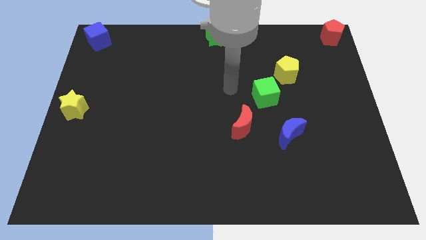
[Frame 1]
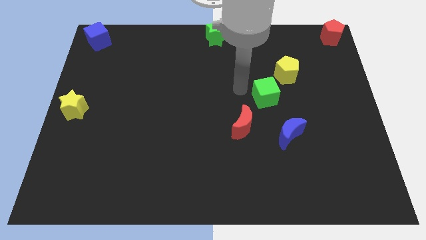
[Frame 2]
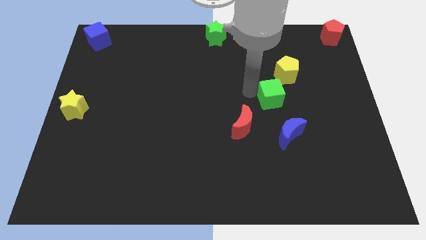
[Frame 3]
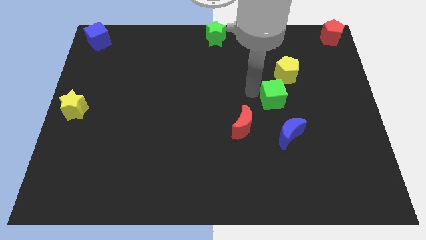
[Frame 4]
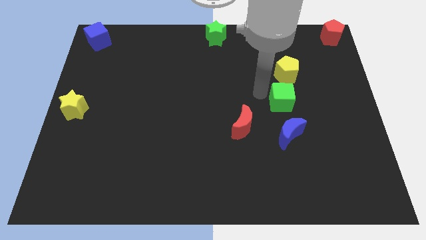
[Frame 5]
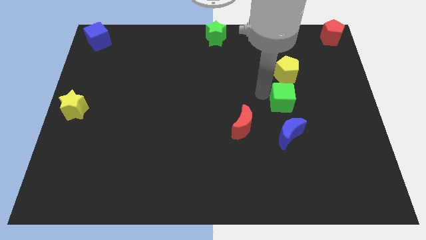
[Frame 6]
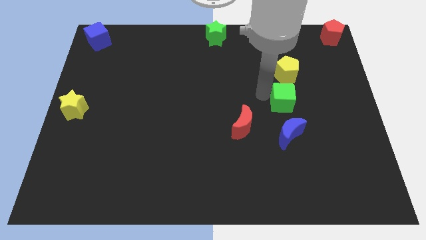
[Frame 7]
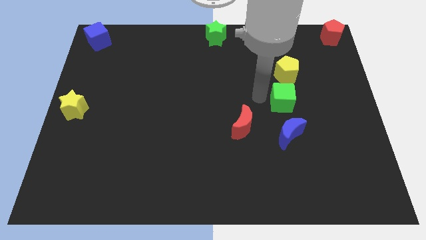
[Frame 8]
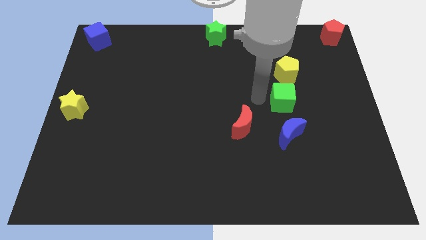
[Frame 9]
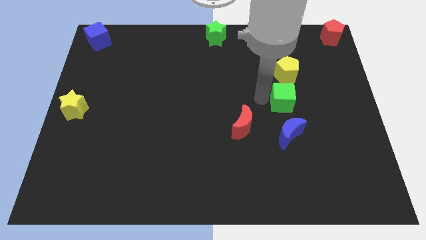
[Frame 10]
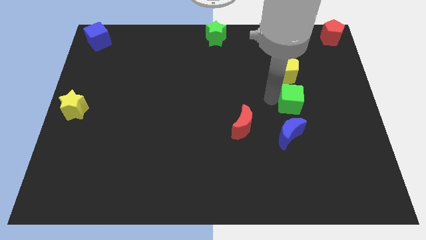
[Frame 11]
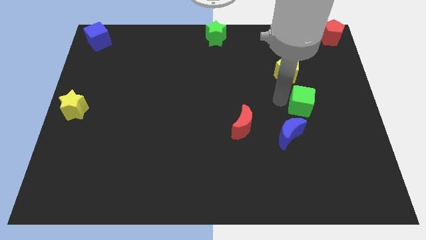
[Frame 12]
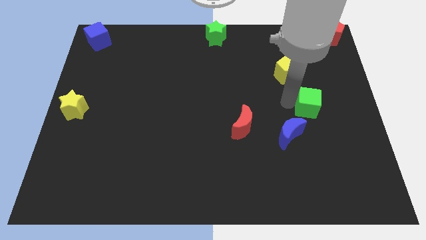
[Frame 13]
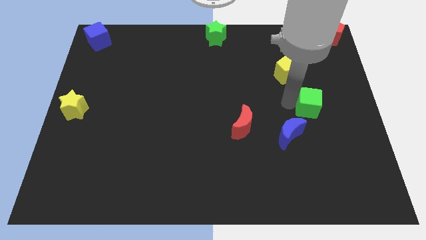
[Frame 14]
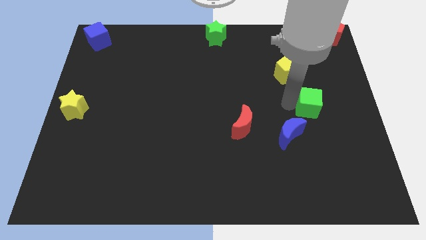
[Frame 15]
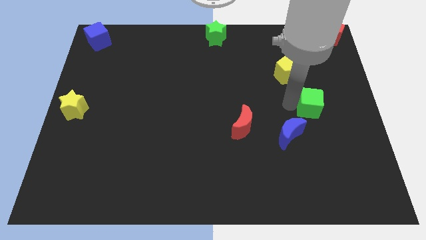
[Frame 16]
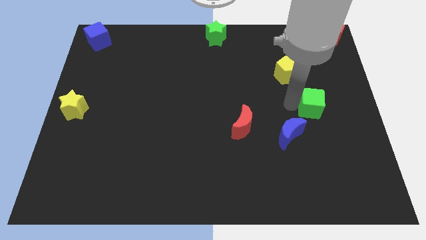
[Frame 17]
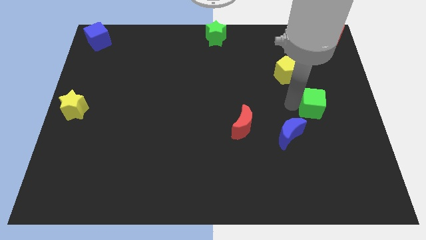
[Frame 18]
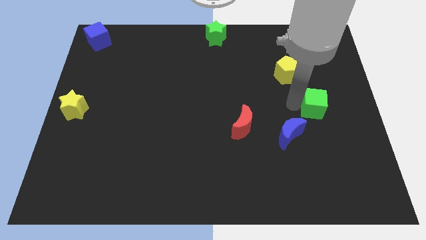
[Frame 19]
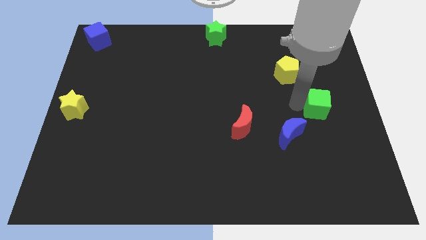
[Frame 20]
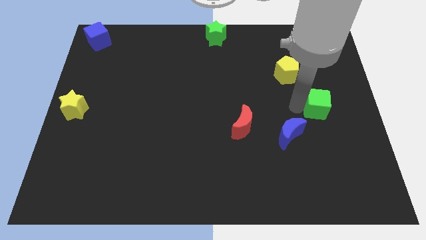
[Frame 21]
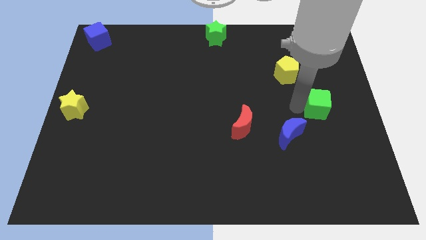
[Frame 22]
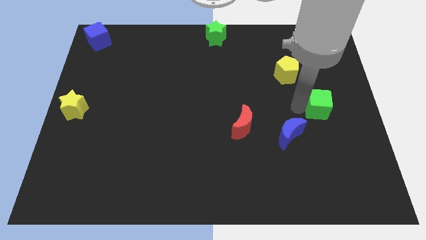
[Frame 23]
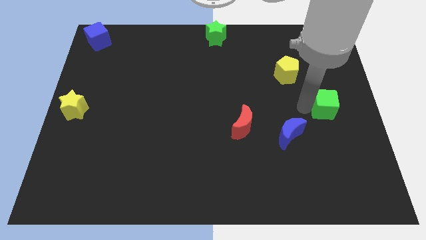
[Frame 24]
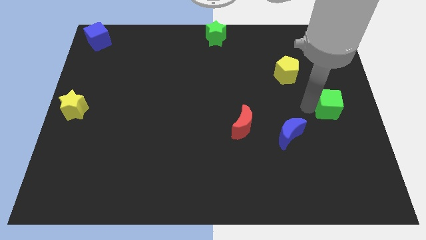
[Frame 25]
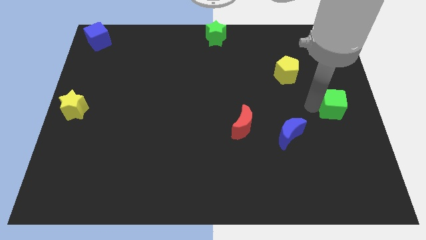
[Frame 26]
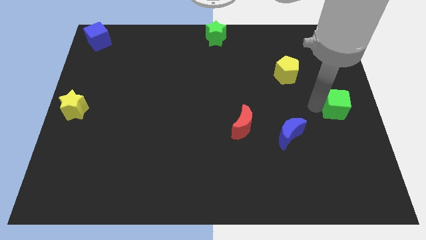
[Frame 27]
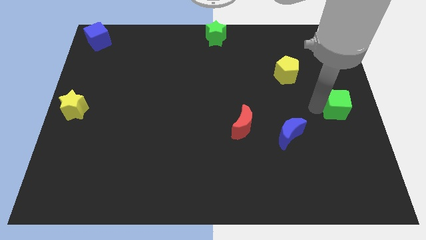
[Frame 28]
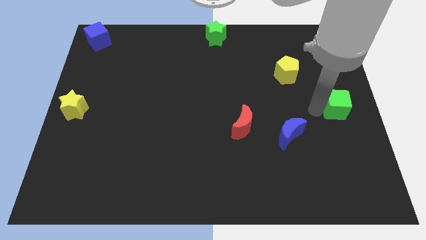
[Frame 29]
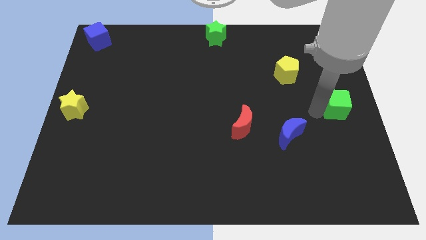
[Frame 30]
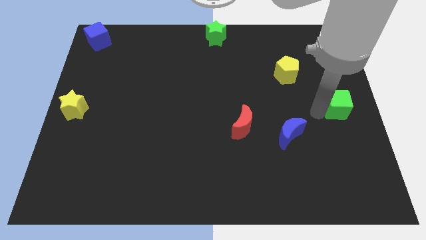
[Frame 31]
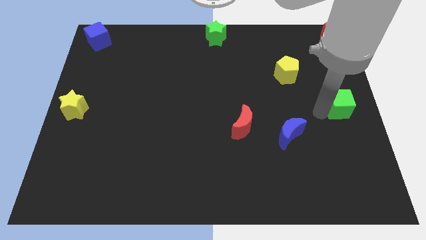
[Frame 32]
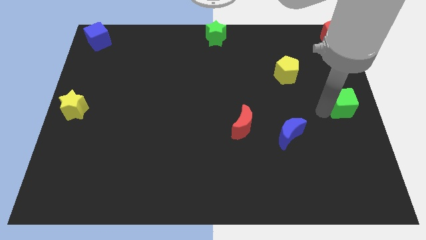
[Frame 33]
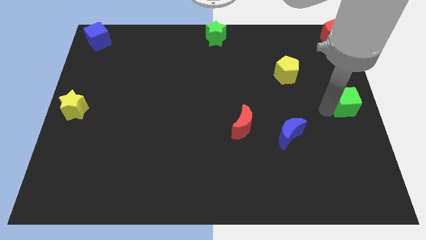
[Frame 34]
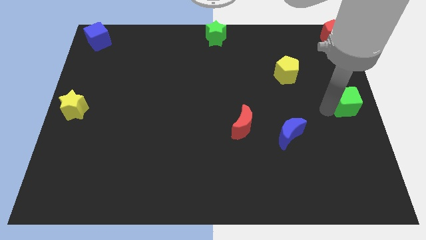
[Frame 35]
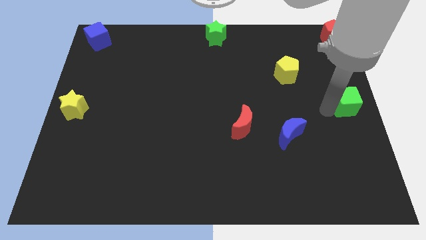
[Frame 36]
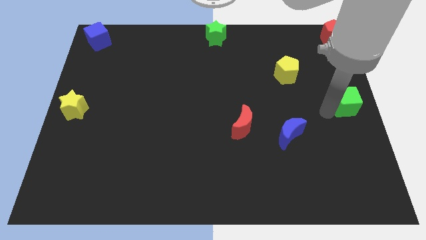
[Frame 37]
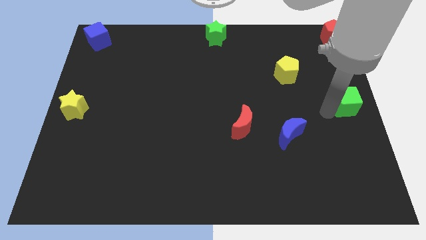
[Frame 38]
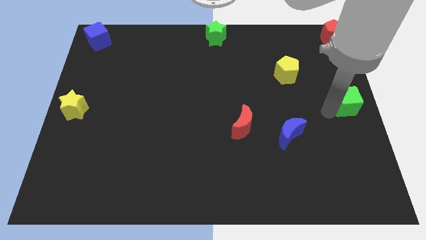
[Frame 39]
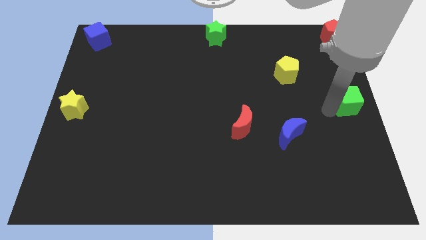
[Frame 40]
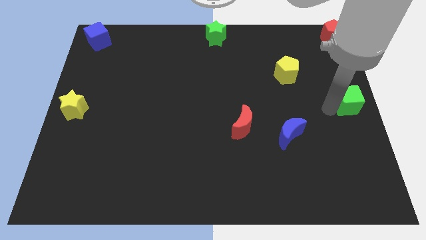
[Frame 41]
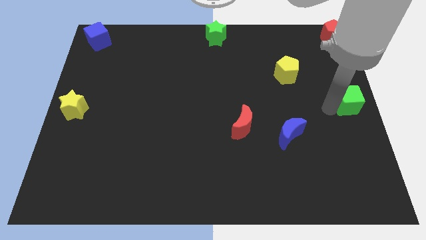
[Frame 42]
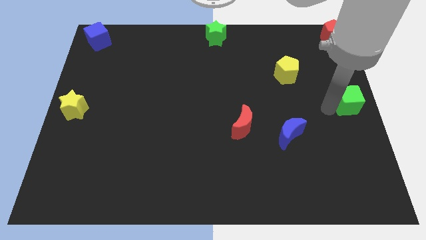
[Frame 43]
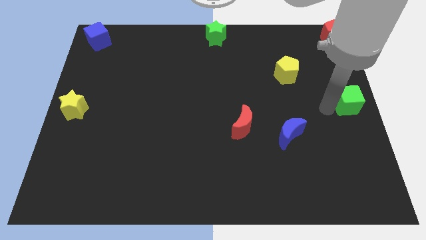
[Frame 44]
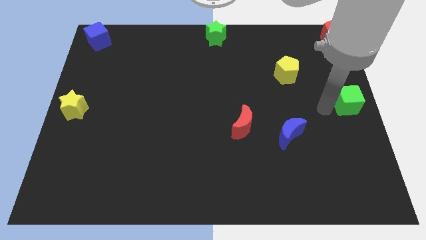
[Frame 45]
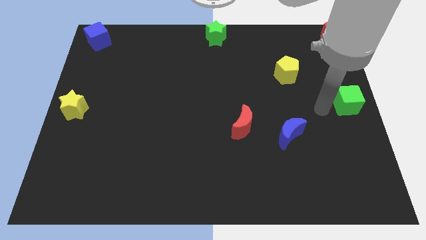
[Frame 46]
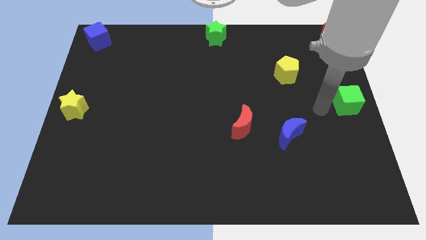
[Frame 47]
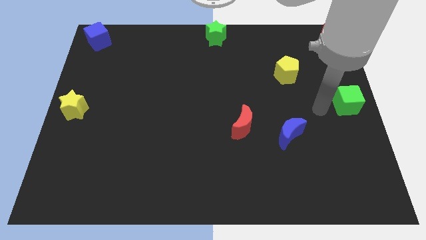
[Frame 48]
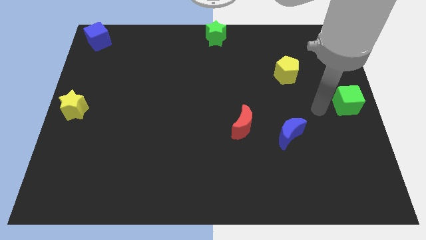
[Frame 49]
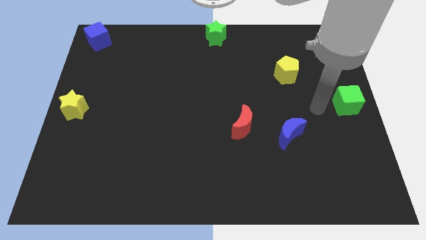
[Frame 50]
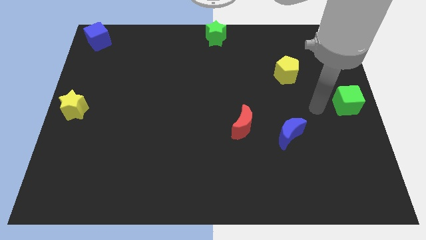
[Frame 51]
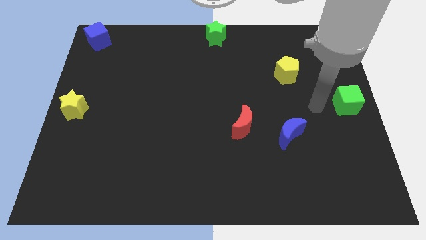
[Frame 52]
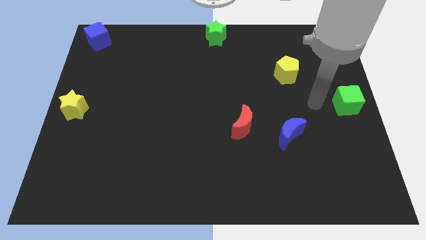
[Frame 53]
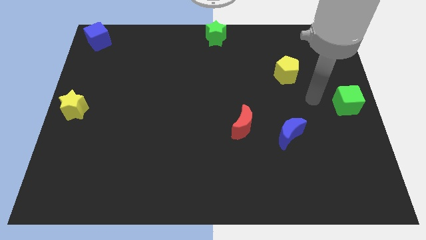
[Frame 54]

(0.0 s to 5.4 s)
move the green cube to the right center of the board

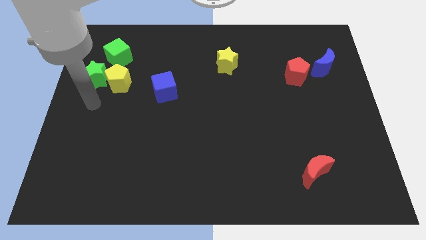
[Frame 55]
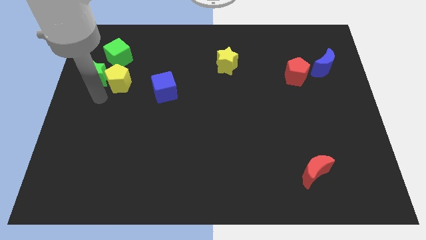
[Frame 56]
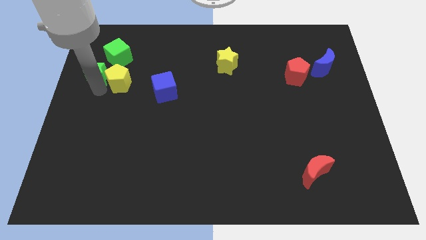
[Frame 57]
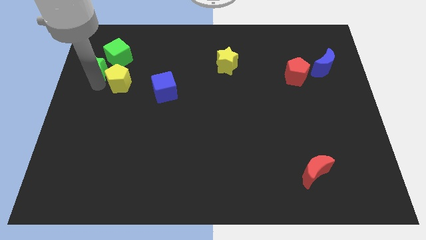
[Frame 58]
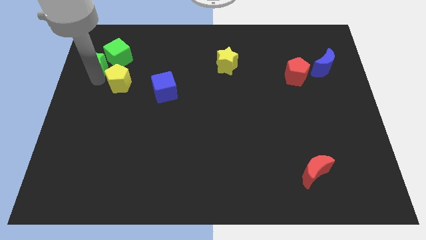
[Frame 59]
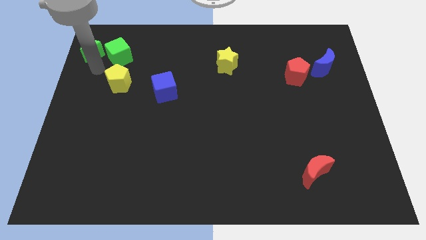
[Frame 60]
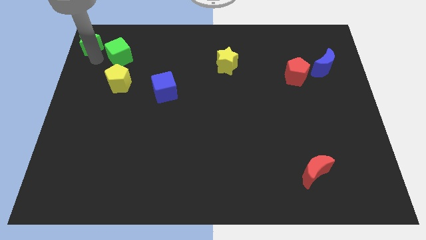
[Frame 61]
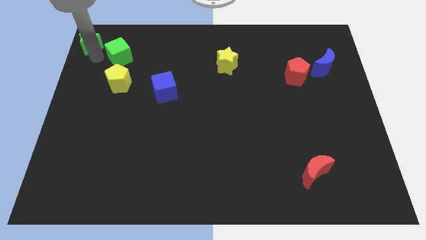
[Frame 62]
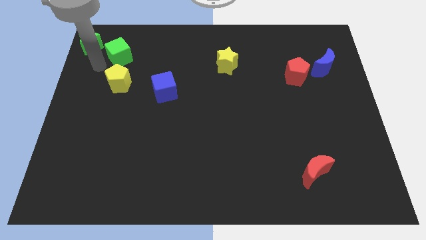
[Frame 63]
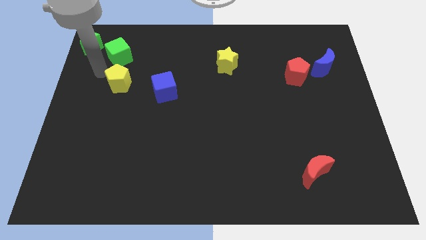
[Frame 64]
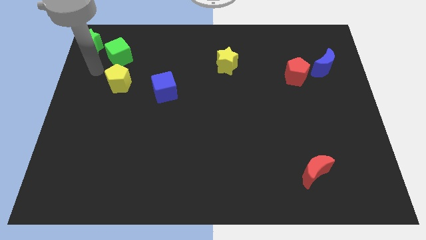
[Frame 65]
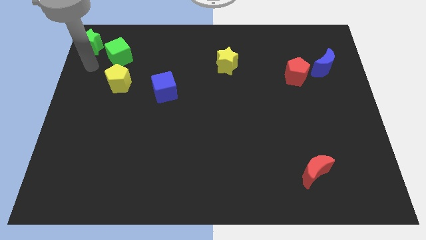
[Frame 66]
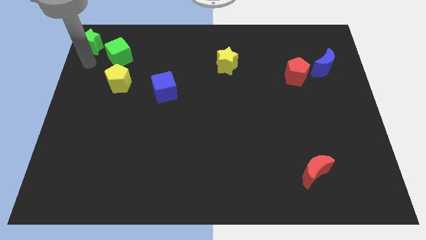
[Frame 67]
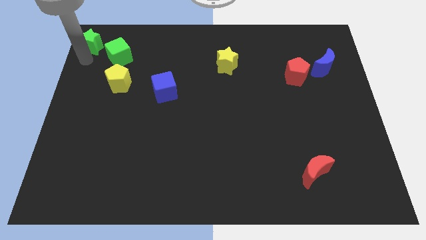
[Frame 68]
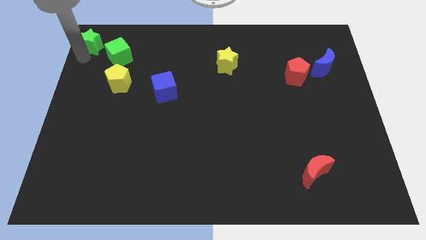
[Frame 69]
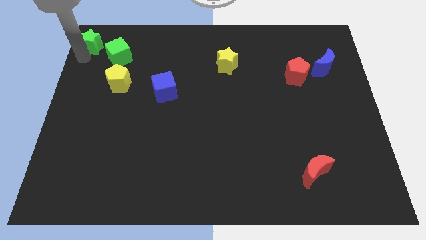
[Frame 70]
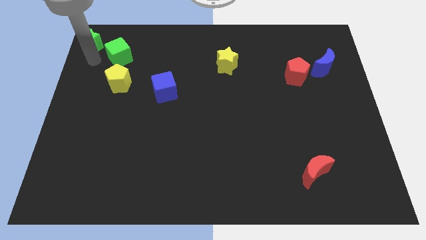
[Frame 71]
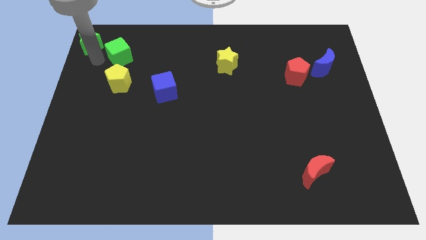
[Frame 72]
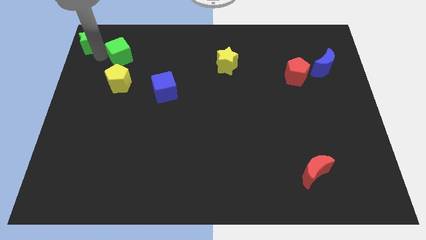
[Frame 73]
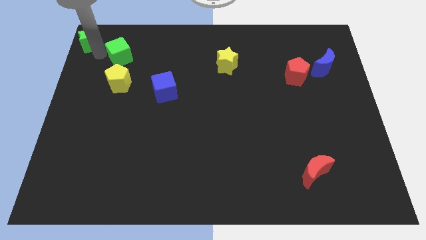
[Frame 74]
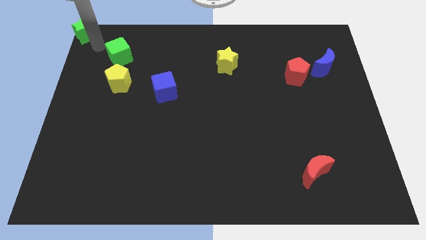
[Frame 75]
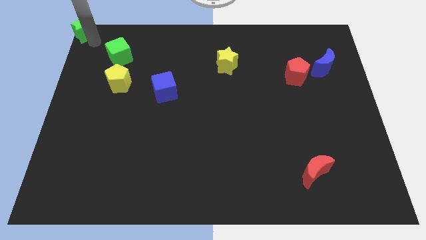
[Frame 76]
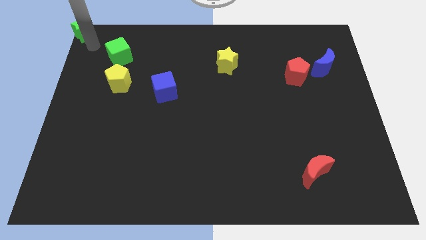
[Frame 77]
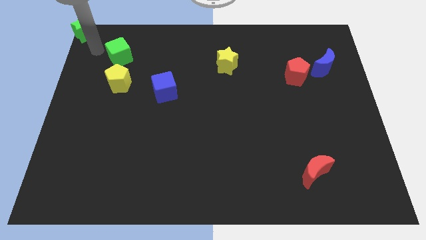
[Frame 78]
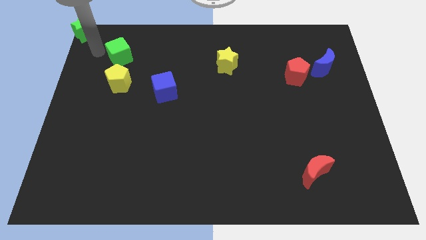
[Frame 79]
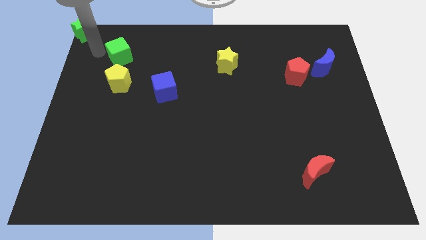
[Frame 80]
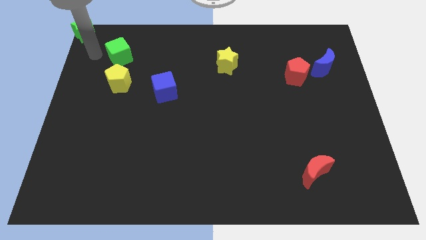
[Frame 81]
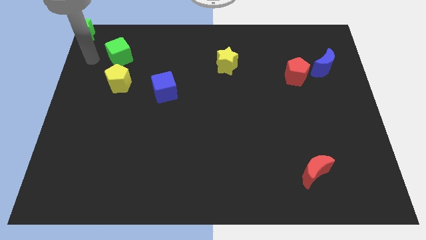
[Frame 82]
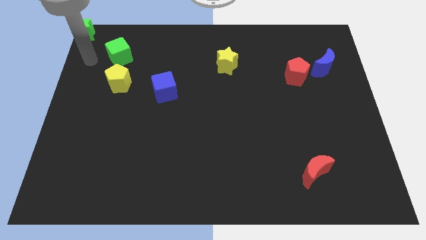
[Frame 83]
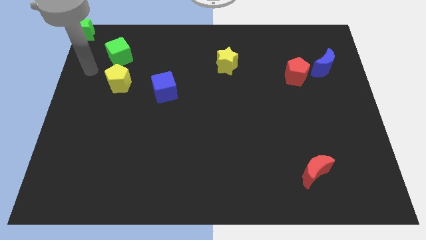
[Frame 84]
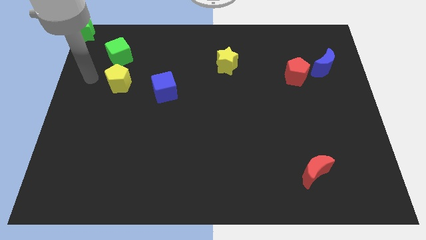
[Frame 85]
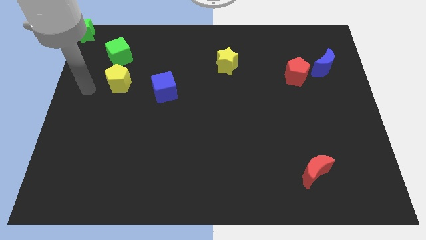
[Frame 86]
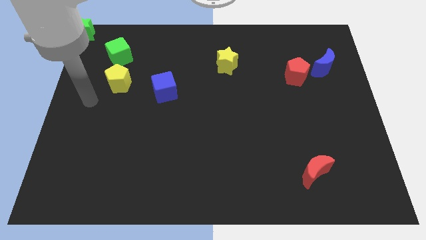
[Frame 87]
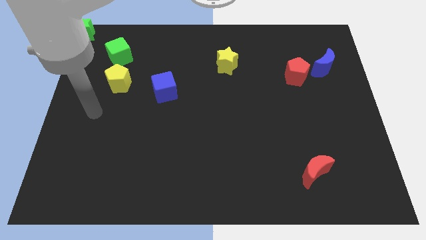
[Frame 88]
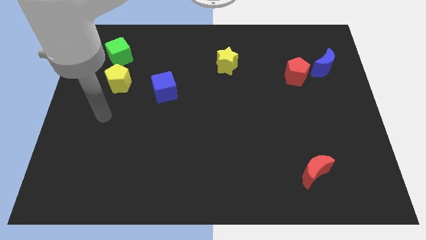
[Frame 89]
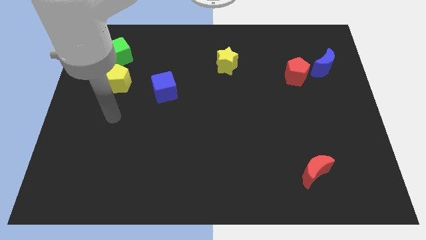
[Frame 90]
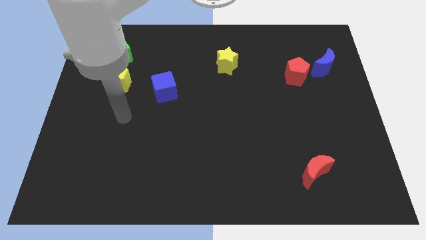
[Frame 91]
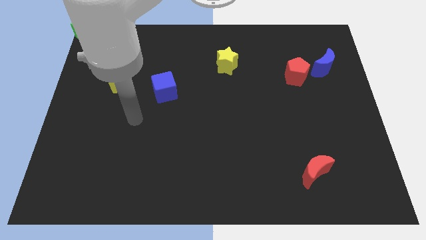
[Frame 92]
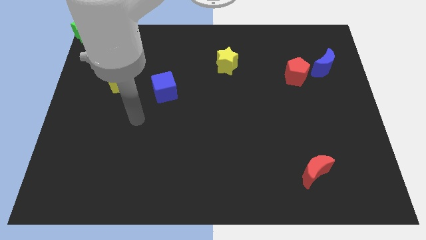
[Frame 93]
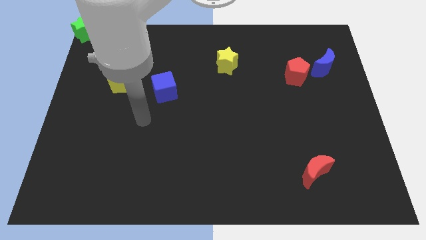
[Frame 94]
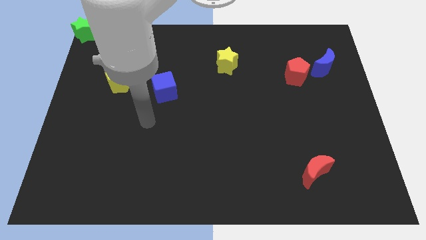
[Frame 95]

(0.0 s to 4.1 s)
move green star to top left corner
